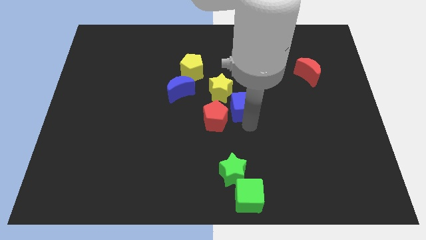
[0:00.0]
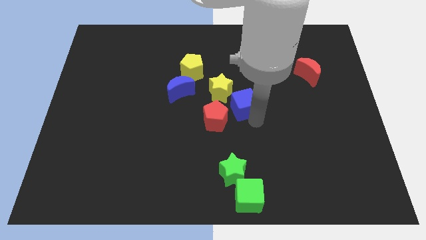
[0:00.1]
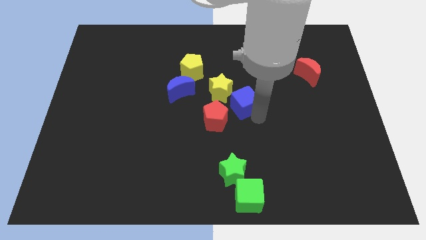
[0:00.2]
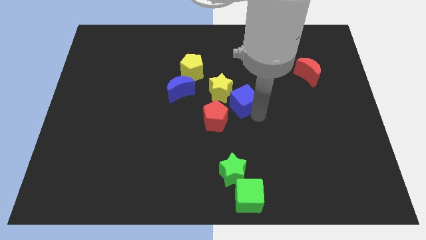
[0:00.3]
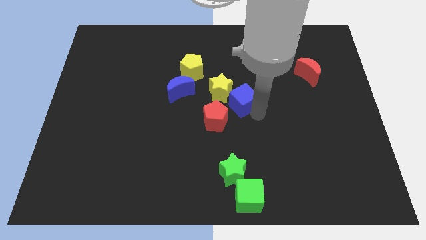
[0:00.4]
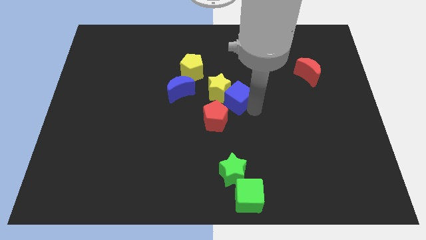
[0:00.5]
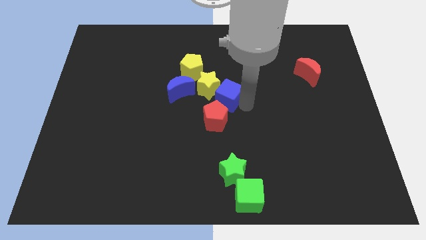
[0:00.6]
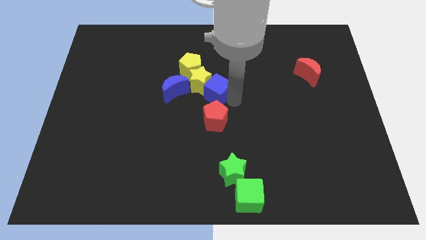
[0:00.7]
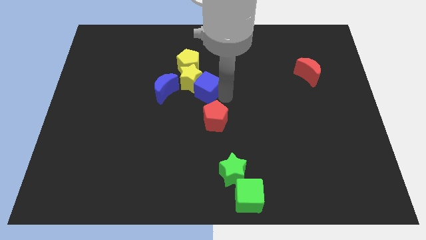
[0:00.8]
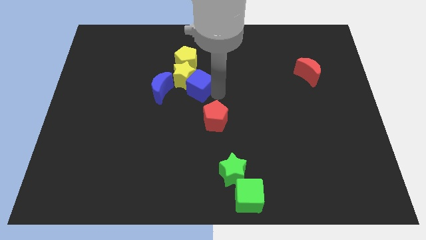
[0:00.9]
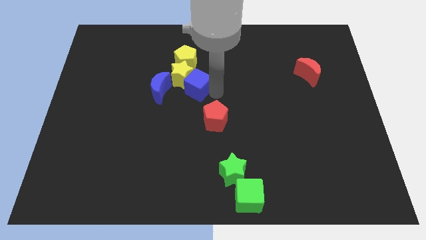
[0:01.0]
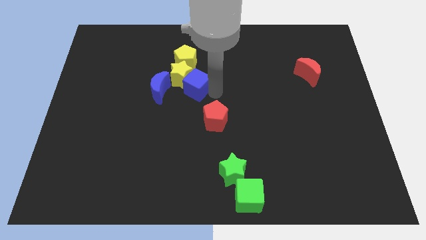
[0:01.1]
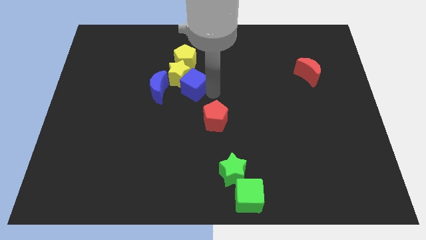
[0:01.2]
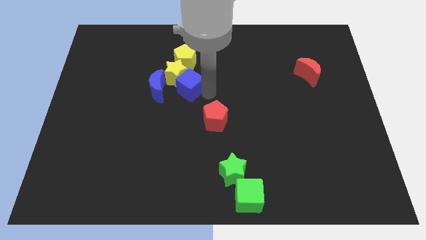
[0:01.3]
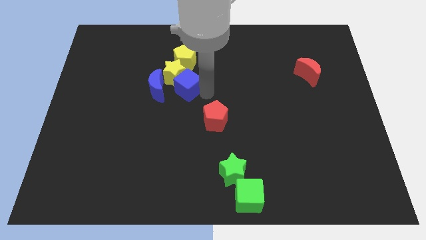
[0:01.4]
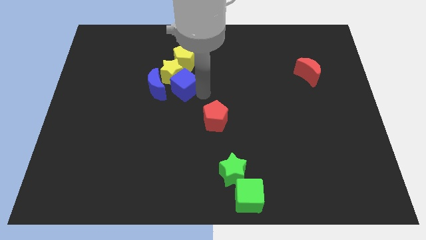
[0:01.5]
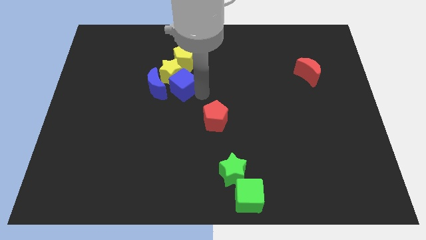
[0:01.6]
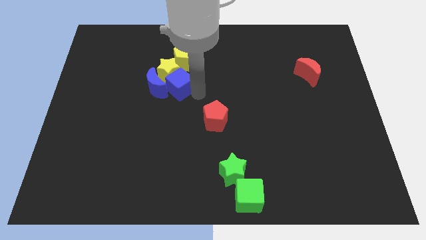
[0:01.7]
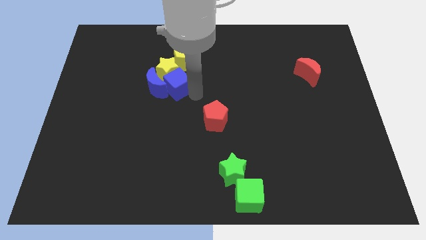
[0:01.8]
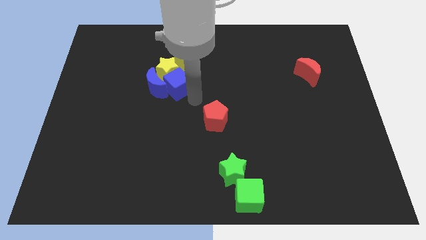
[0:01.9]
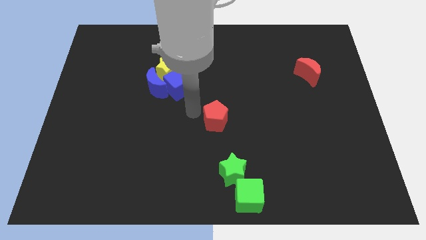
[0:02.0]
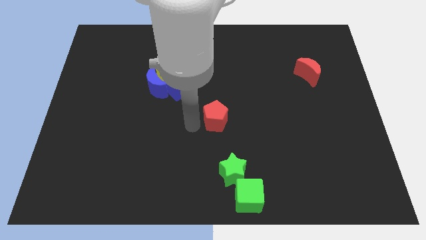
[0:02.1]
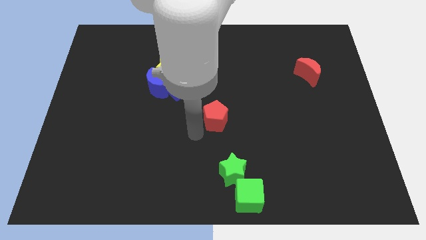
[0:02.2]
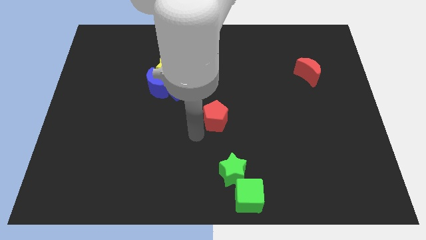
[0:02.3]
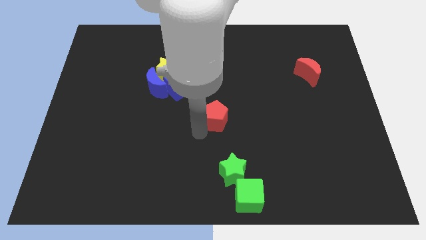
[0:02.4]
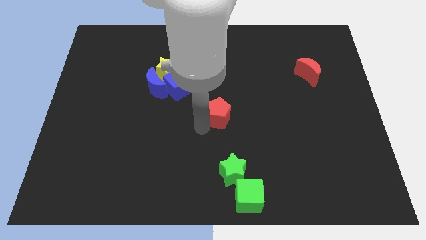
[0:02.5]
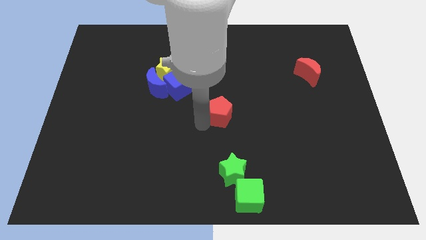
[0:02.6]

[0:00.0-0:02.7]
push blue cube into yellow star

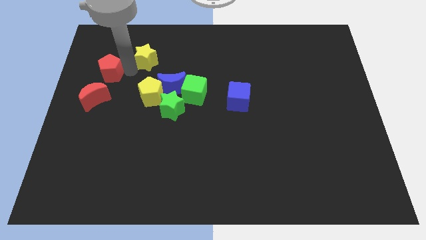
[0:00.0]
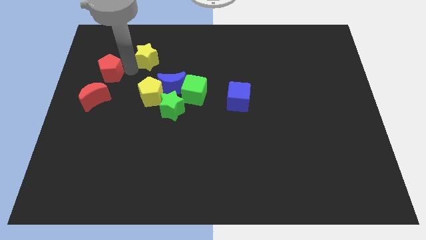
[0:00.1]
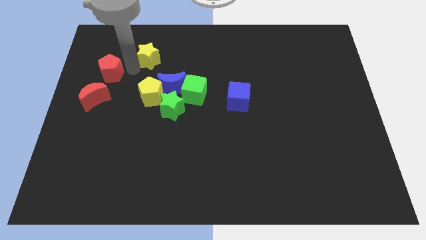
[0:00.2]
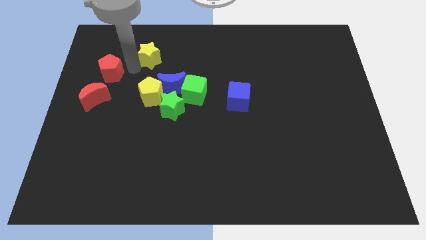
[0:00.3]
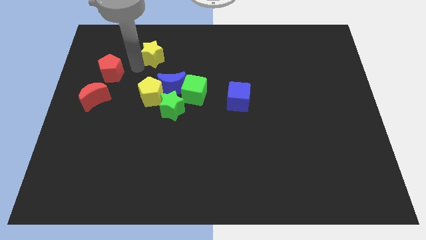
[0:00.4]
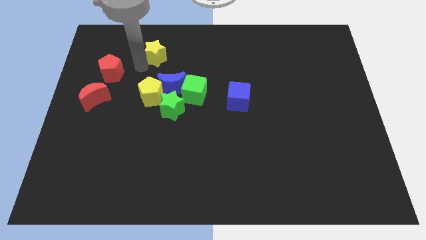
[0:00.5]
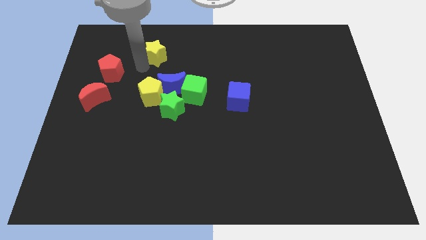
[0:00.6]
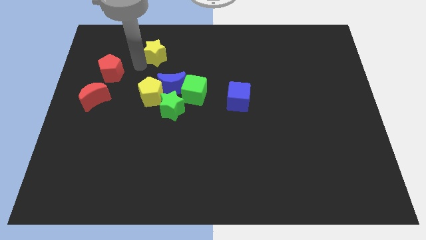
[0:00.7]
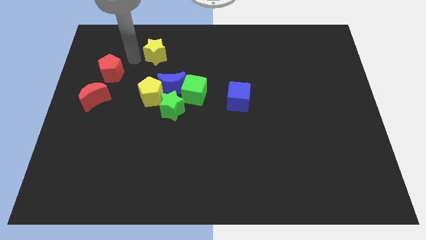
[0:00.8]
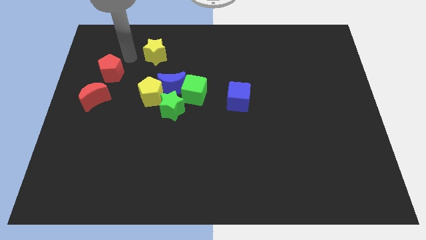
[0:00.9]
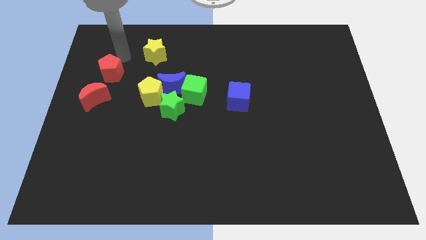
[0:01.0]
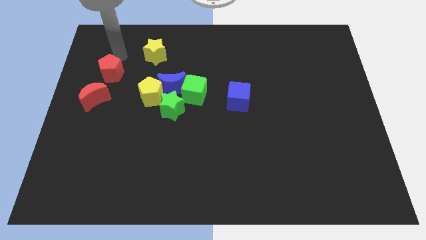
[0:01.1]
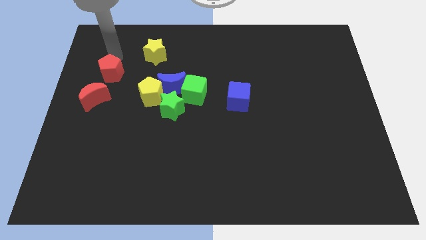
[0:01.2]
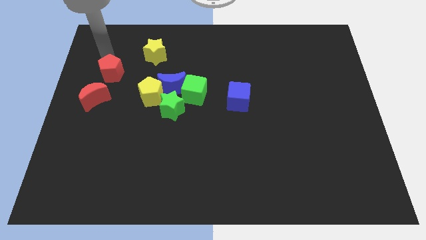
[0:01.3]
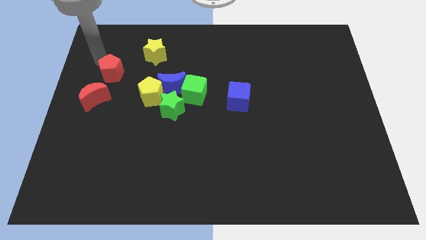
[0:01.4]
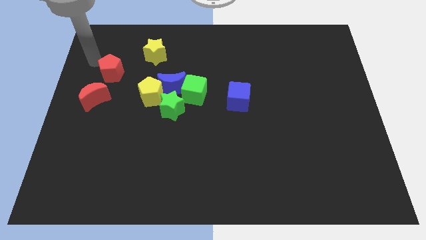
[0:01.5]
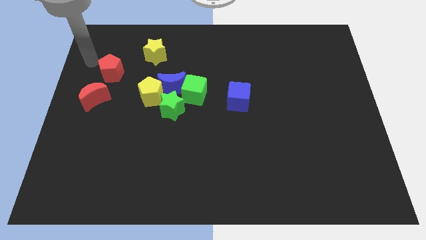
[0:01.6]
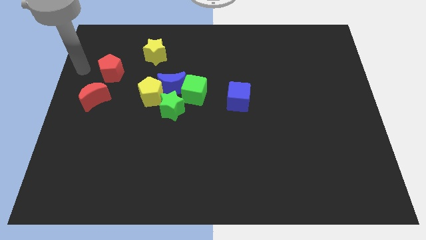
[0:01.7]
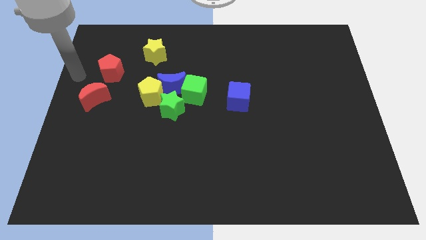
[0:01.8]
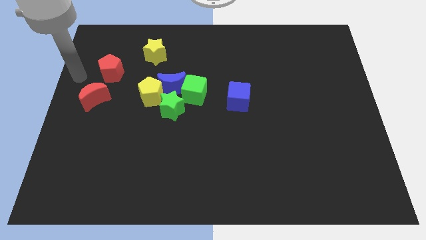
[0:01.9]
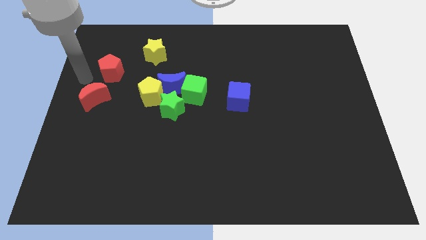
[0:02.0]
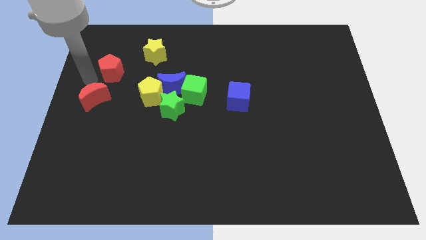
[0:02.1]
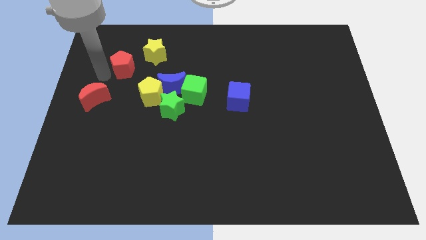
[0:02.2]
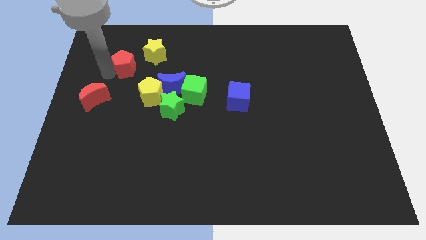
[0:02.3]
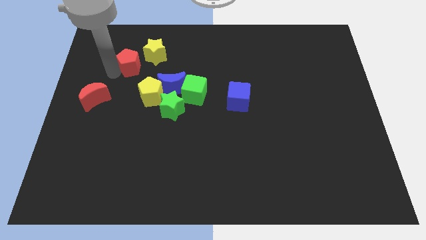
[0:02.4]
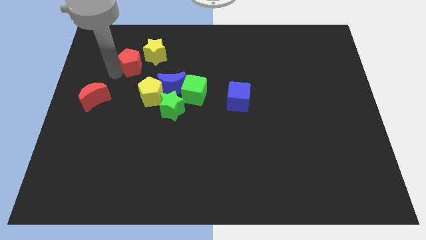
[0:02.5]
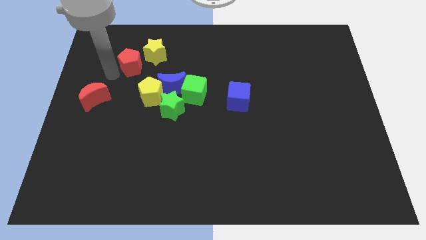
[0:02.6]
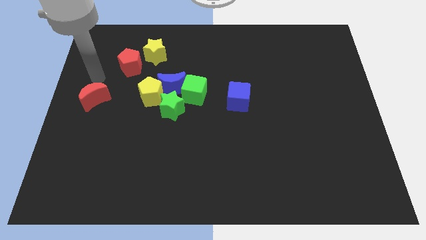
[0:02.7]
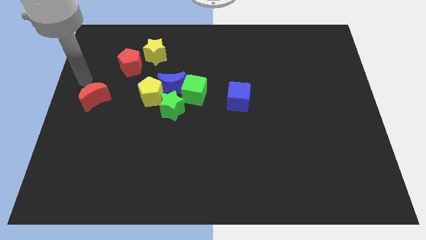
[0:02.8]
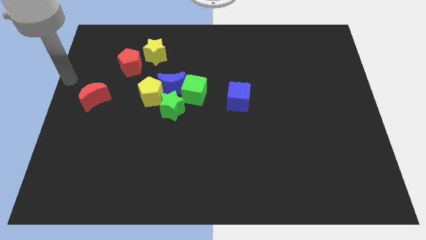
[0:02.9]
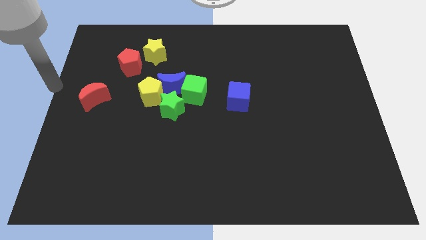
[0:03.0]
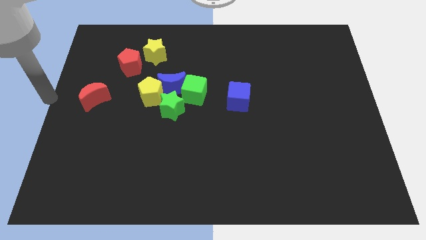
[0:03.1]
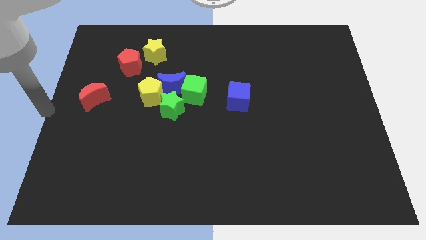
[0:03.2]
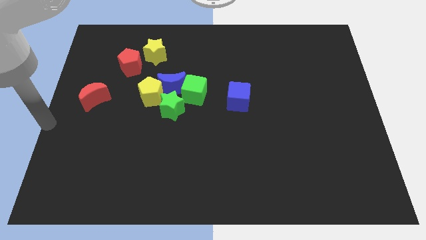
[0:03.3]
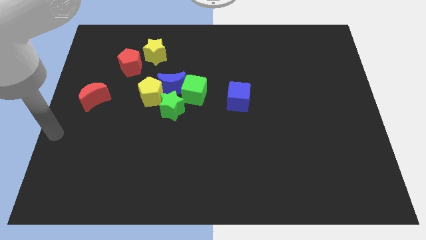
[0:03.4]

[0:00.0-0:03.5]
move red pentagon and yellow star towards the top right side of the board

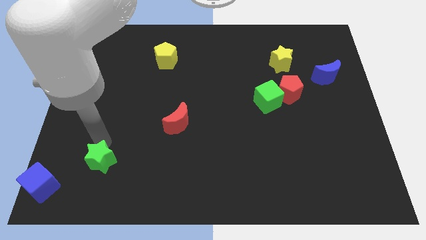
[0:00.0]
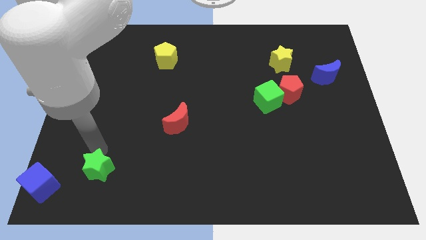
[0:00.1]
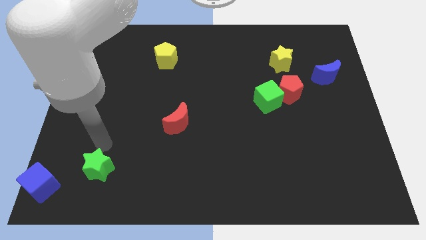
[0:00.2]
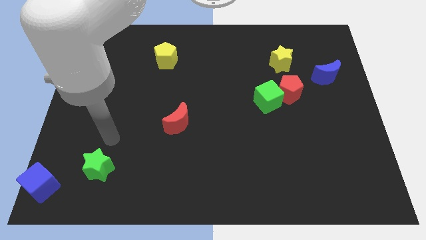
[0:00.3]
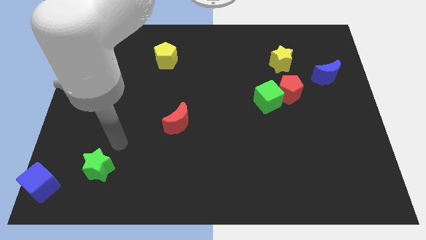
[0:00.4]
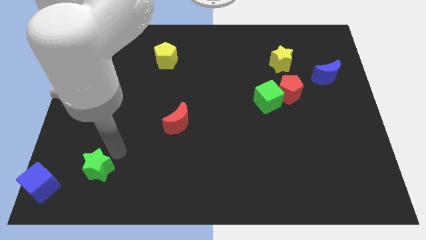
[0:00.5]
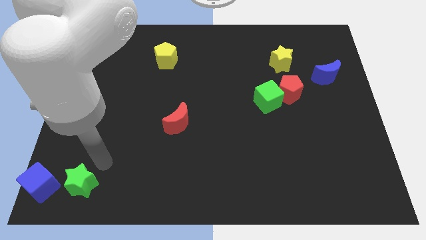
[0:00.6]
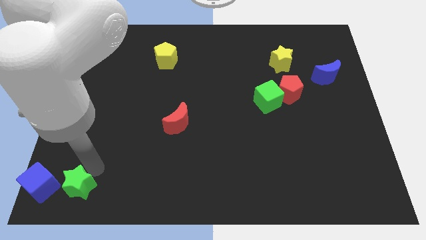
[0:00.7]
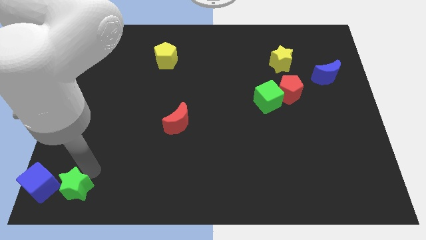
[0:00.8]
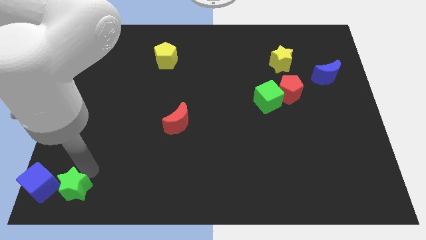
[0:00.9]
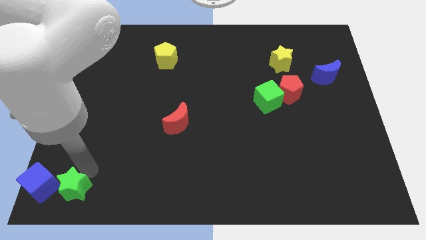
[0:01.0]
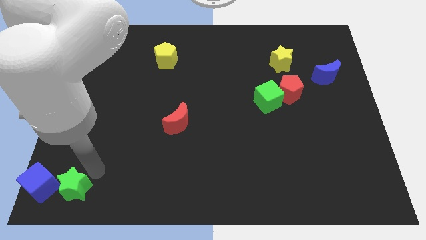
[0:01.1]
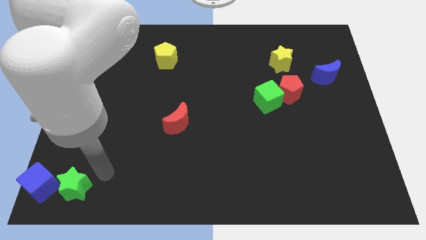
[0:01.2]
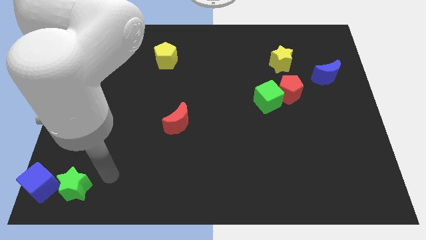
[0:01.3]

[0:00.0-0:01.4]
place green star to the right of blue cube

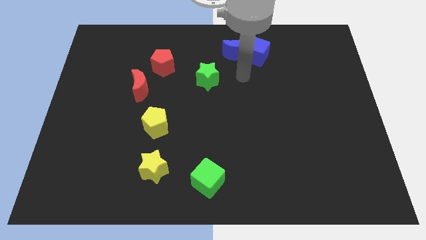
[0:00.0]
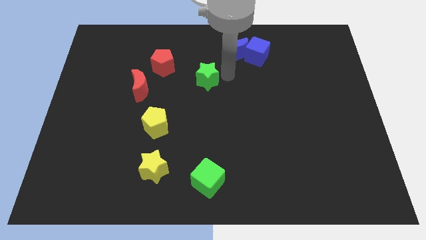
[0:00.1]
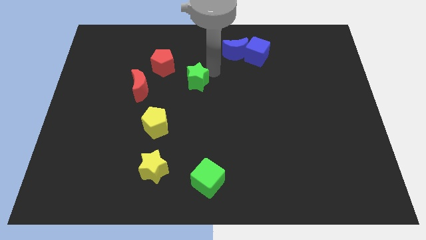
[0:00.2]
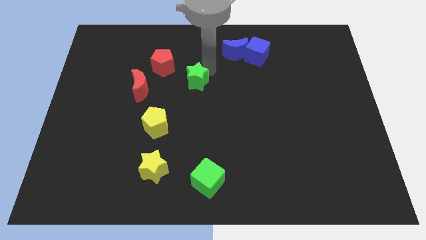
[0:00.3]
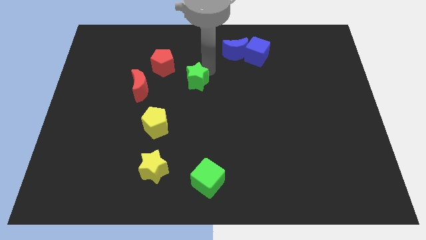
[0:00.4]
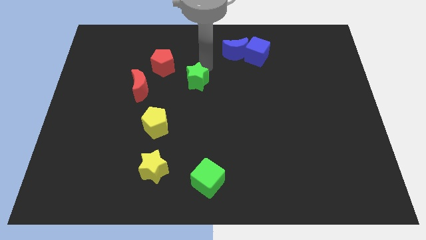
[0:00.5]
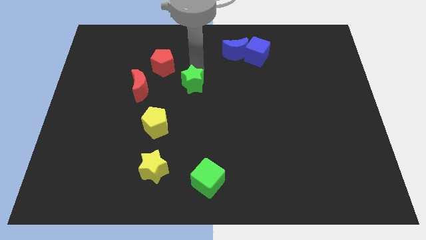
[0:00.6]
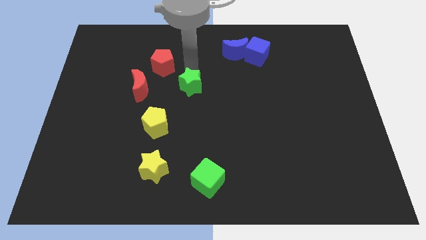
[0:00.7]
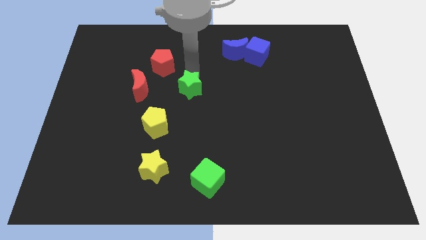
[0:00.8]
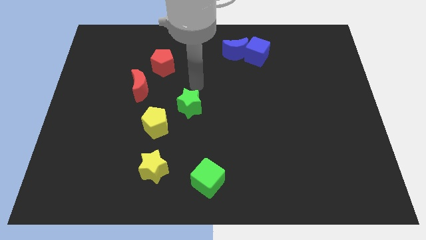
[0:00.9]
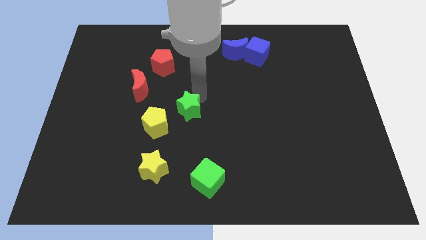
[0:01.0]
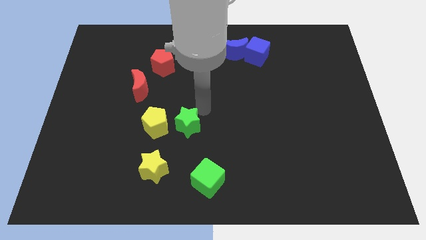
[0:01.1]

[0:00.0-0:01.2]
place the green star to the right side of the yellow pentagon
